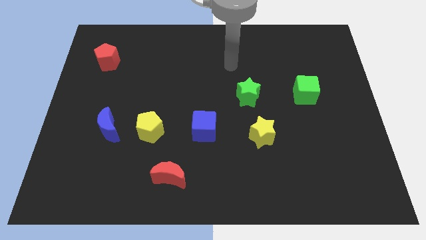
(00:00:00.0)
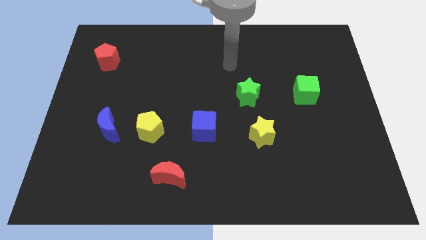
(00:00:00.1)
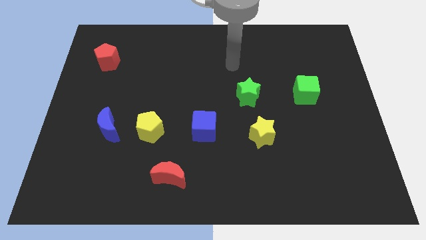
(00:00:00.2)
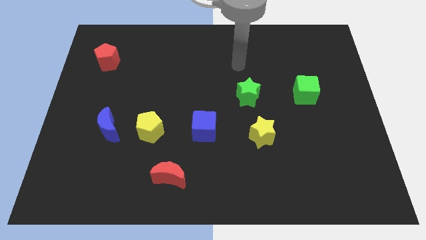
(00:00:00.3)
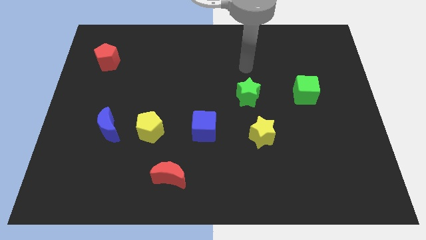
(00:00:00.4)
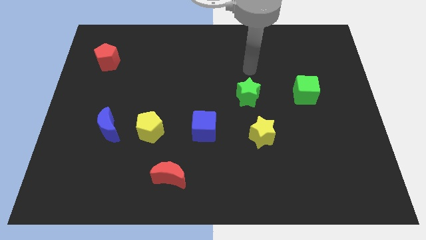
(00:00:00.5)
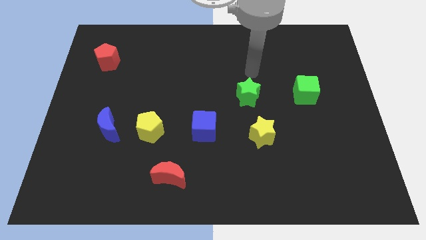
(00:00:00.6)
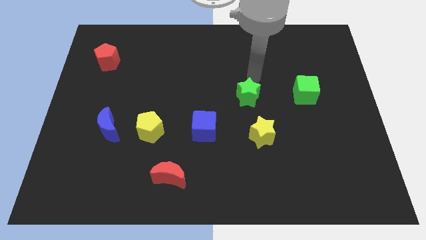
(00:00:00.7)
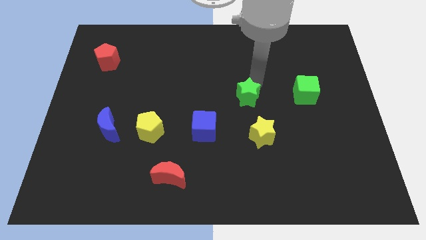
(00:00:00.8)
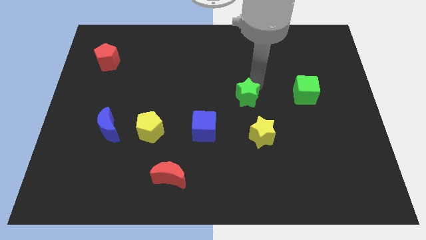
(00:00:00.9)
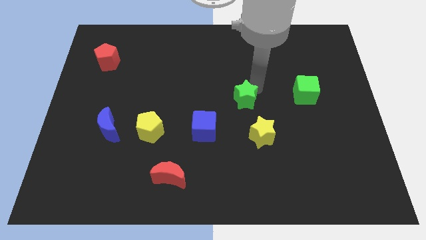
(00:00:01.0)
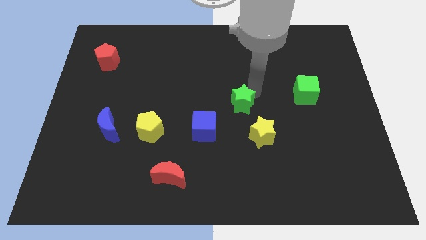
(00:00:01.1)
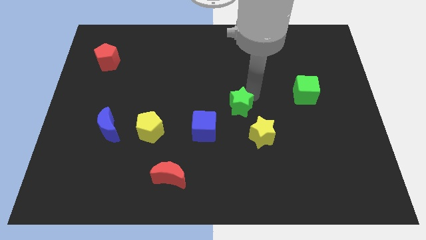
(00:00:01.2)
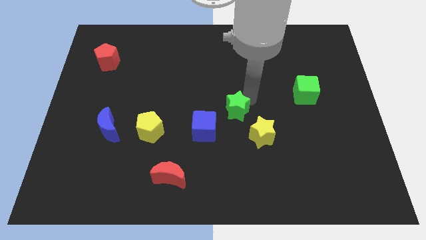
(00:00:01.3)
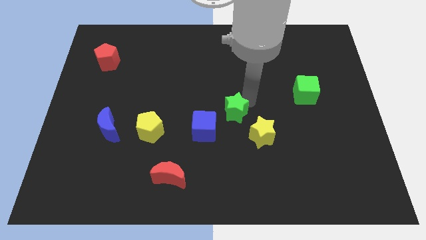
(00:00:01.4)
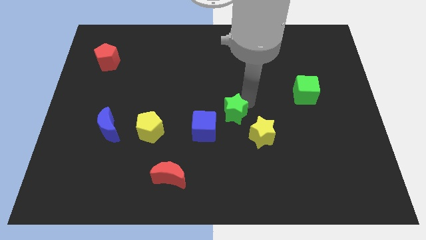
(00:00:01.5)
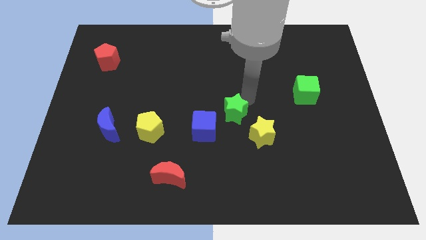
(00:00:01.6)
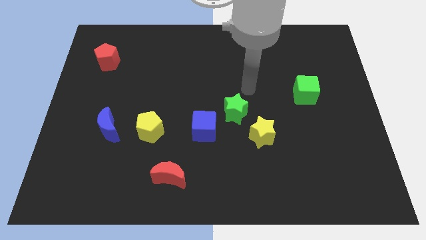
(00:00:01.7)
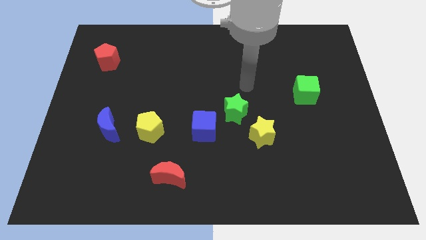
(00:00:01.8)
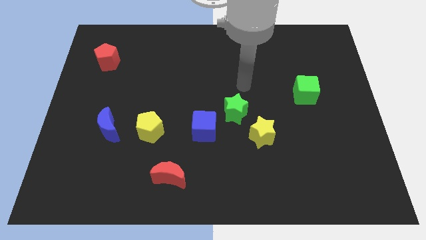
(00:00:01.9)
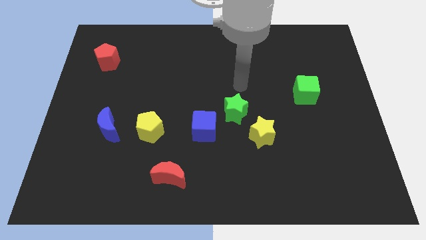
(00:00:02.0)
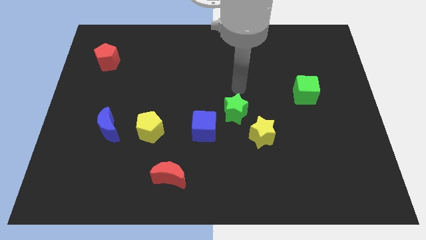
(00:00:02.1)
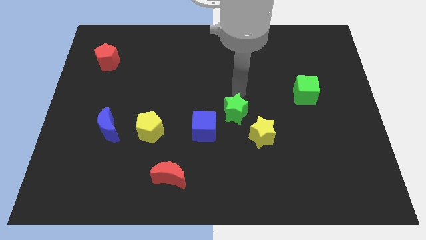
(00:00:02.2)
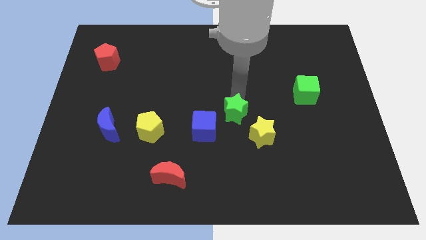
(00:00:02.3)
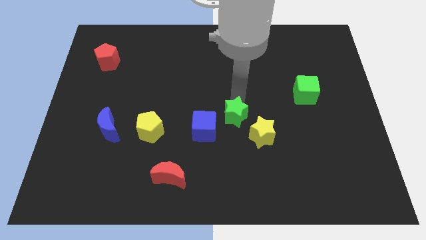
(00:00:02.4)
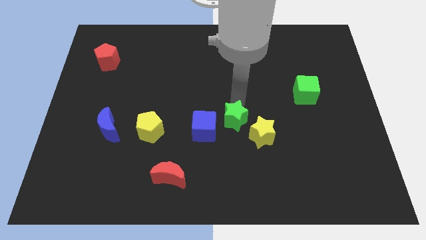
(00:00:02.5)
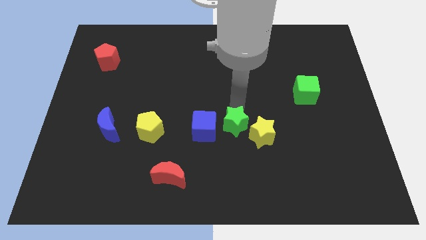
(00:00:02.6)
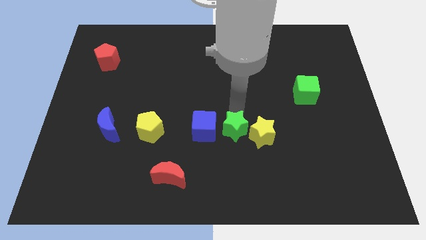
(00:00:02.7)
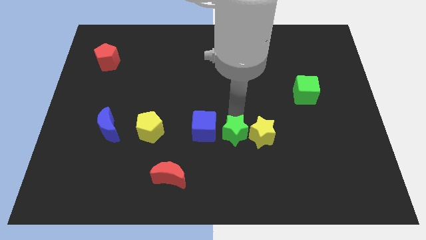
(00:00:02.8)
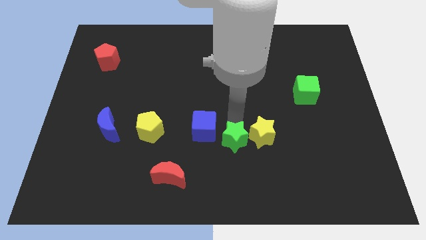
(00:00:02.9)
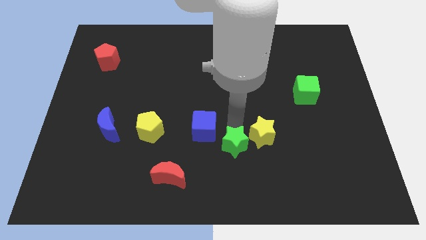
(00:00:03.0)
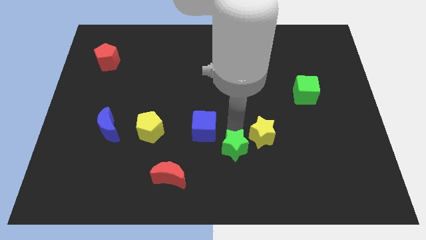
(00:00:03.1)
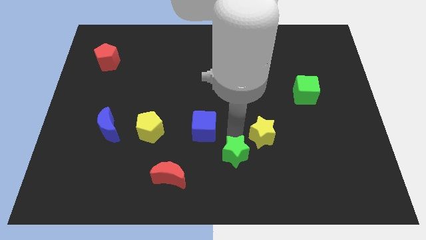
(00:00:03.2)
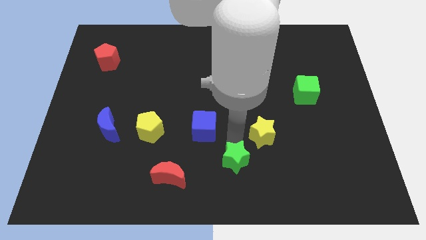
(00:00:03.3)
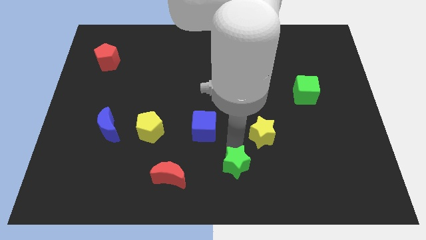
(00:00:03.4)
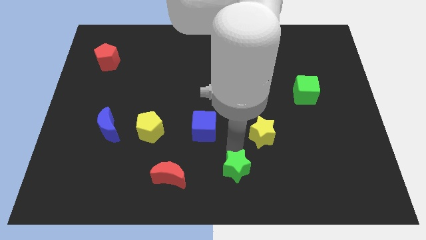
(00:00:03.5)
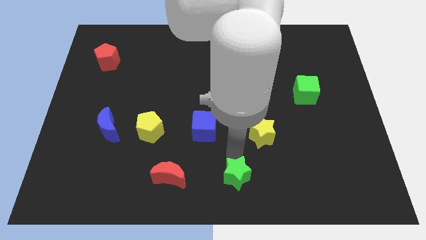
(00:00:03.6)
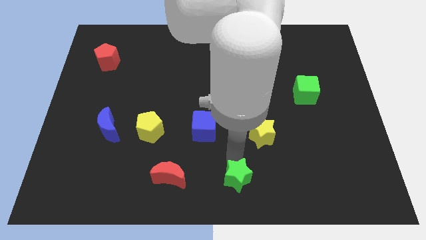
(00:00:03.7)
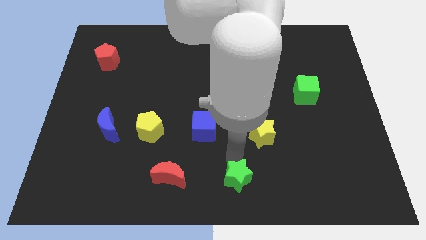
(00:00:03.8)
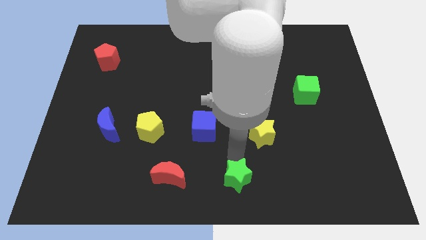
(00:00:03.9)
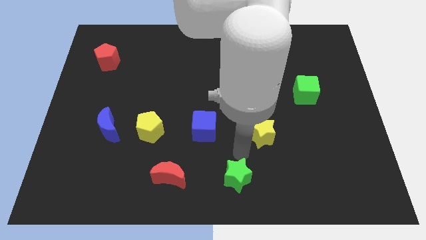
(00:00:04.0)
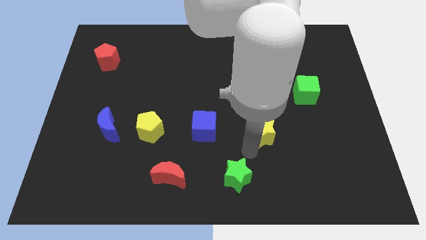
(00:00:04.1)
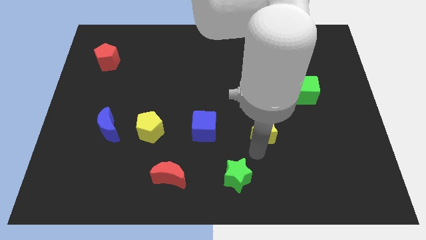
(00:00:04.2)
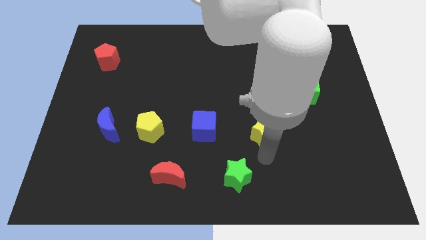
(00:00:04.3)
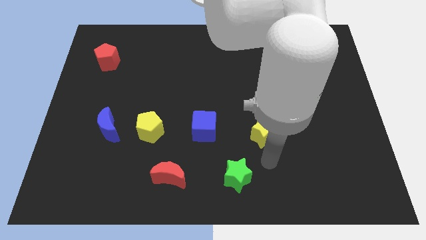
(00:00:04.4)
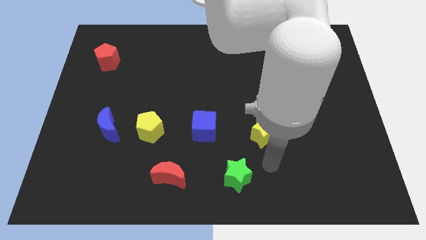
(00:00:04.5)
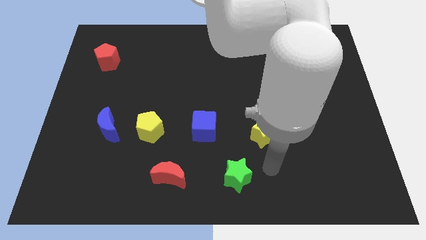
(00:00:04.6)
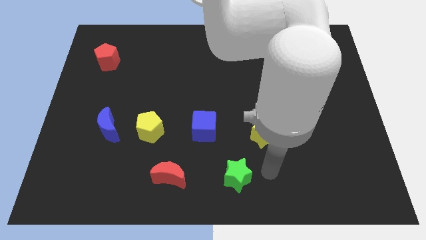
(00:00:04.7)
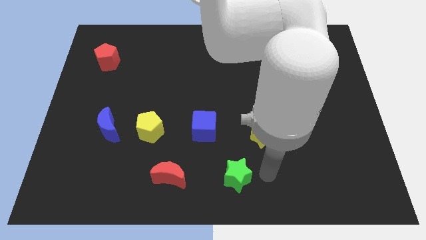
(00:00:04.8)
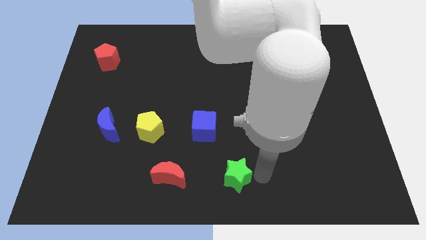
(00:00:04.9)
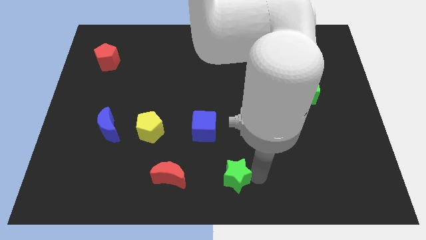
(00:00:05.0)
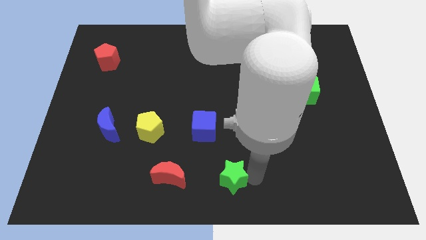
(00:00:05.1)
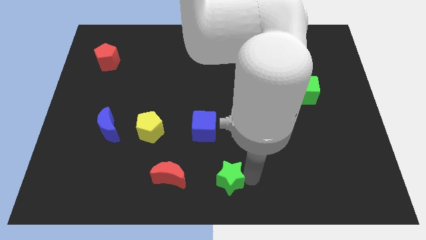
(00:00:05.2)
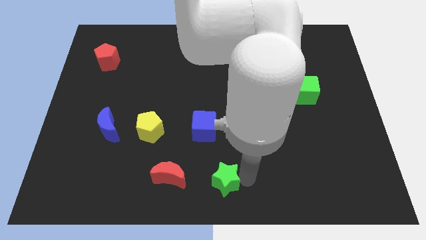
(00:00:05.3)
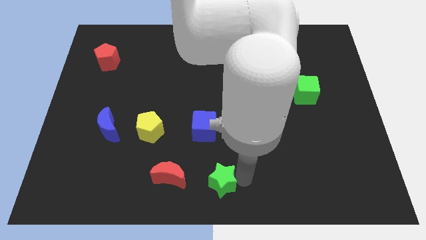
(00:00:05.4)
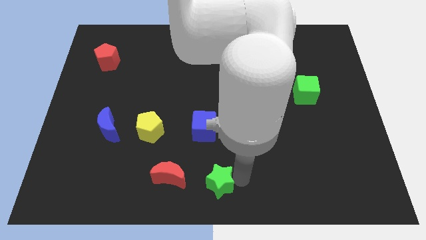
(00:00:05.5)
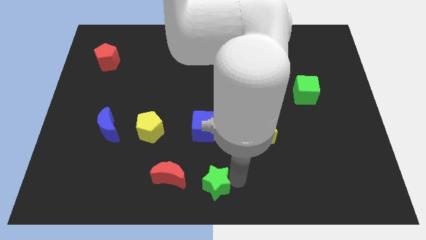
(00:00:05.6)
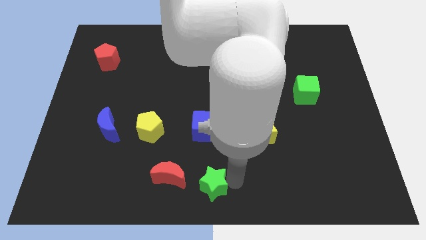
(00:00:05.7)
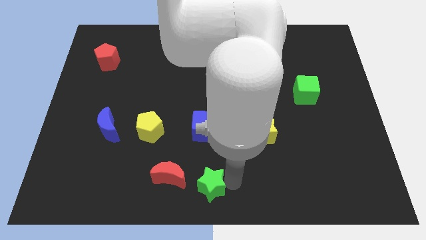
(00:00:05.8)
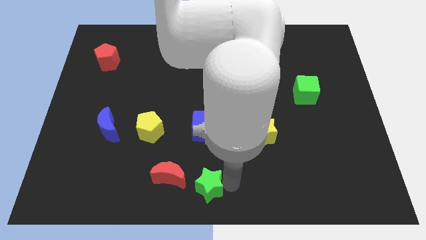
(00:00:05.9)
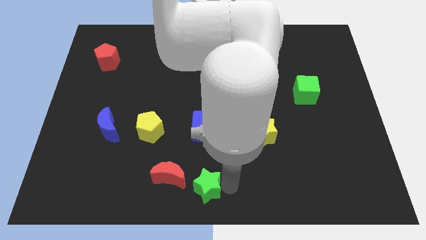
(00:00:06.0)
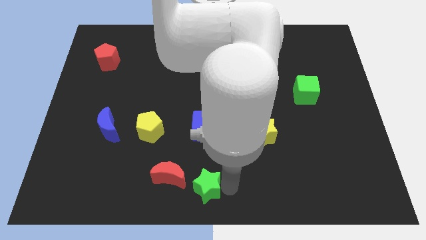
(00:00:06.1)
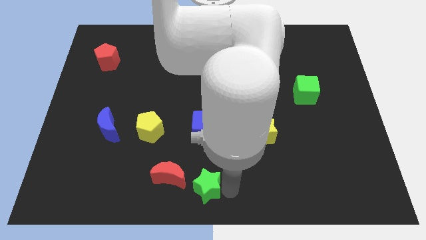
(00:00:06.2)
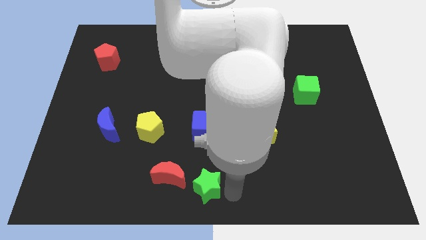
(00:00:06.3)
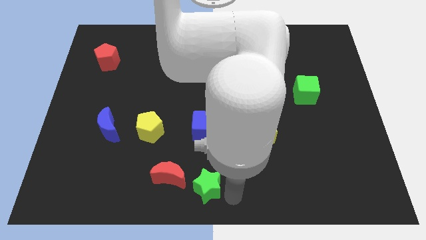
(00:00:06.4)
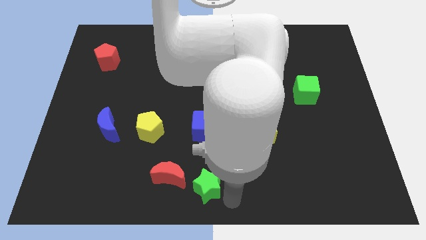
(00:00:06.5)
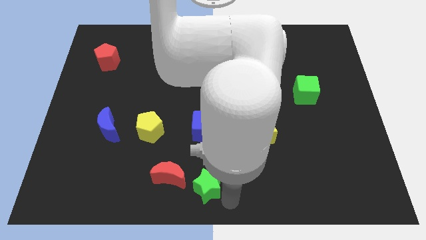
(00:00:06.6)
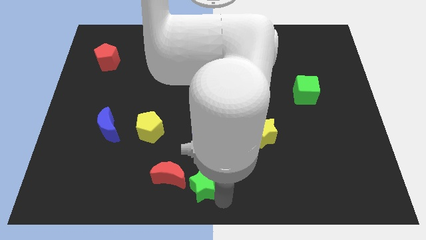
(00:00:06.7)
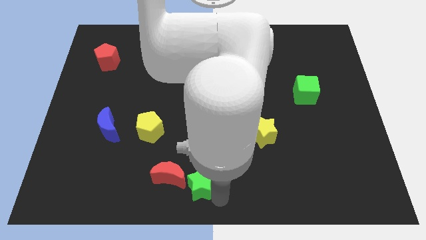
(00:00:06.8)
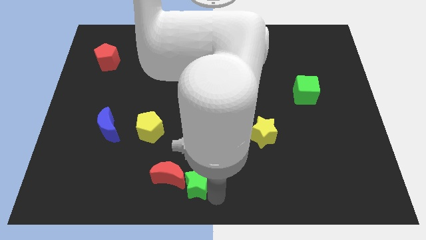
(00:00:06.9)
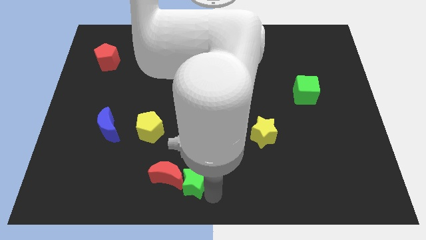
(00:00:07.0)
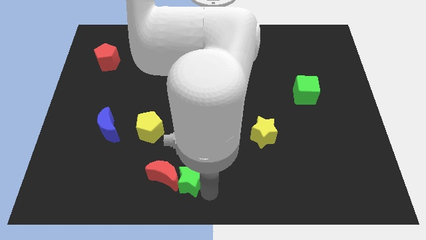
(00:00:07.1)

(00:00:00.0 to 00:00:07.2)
put the green star towards the red moon

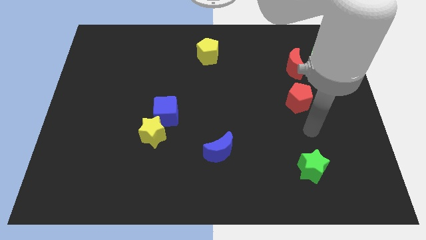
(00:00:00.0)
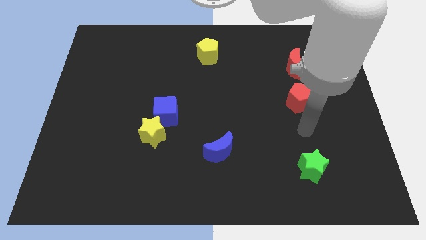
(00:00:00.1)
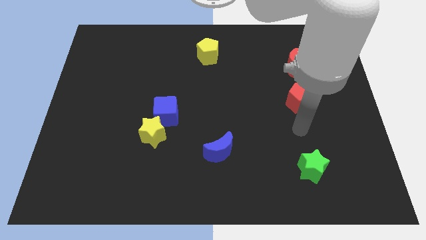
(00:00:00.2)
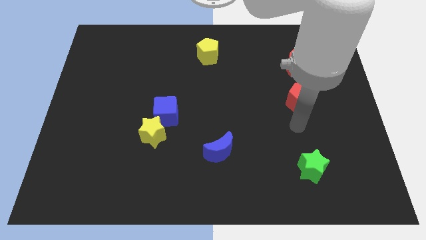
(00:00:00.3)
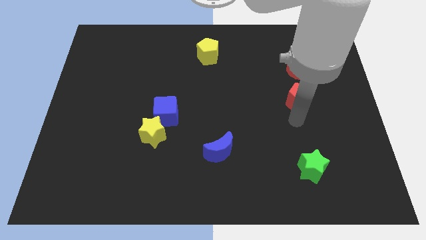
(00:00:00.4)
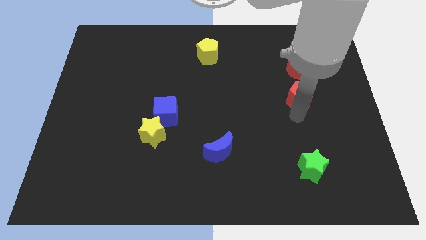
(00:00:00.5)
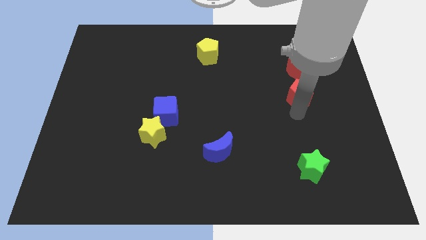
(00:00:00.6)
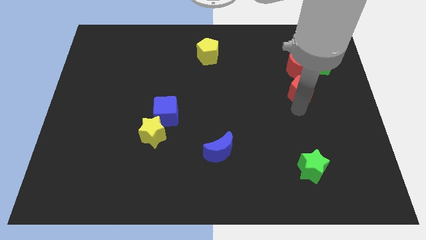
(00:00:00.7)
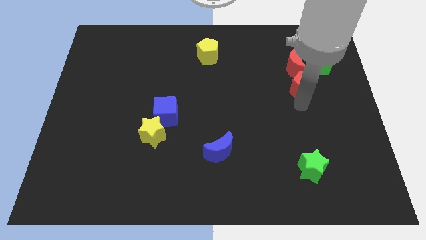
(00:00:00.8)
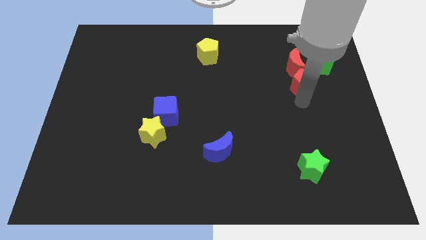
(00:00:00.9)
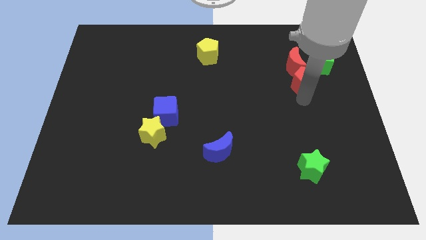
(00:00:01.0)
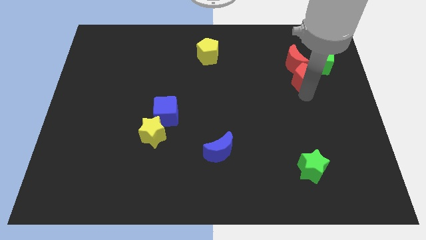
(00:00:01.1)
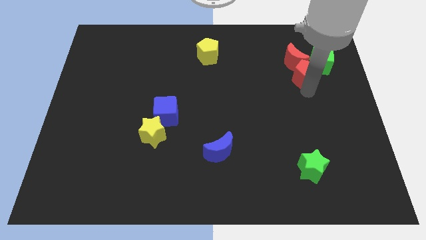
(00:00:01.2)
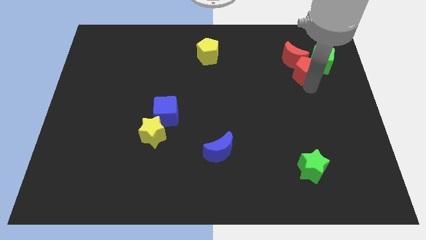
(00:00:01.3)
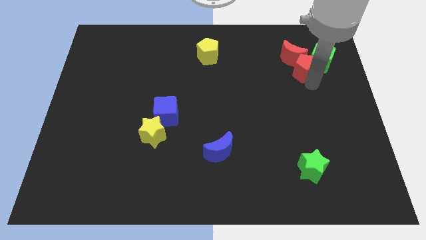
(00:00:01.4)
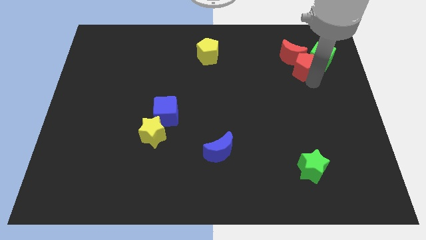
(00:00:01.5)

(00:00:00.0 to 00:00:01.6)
slide the red pentagon towards the green cube
